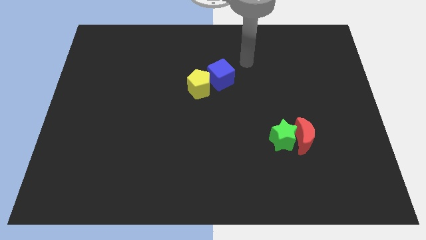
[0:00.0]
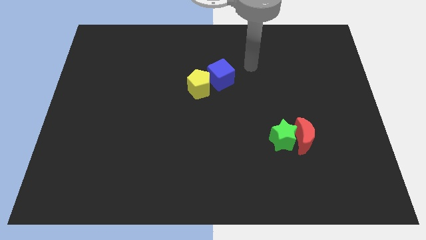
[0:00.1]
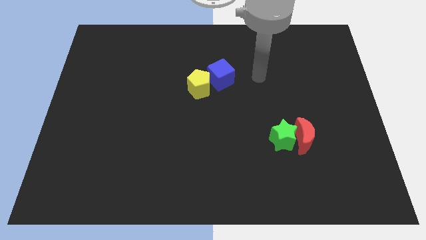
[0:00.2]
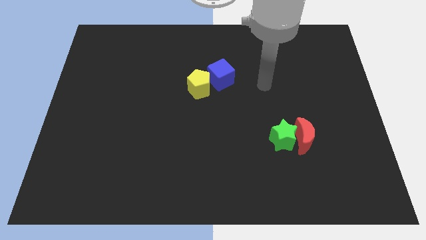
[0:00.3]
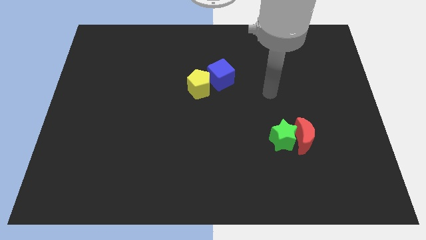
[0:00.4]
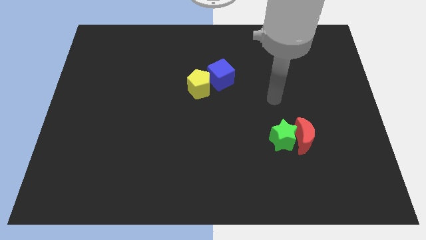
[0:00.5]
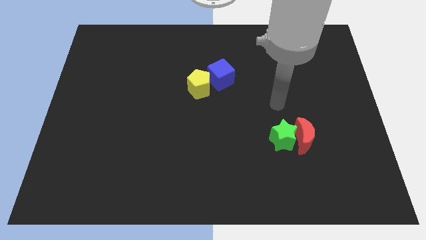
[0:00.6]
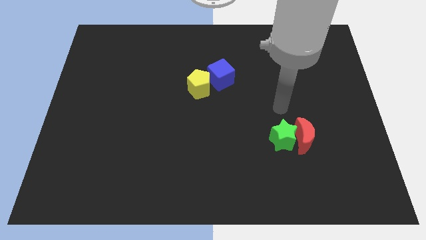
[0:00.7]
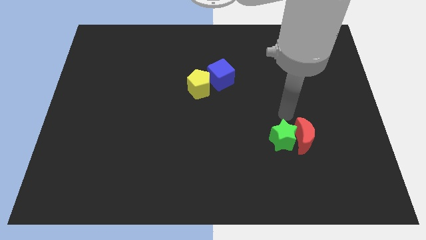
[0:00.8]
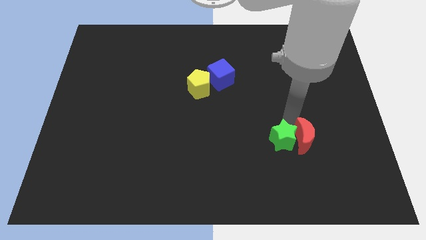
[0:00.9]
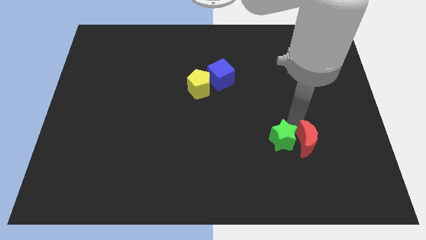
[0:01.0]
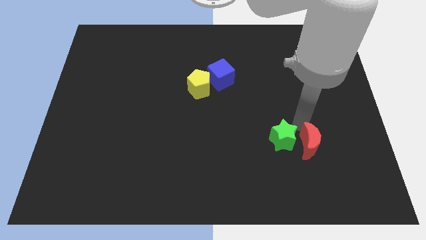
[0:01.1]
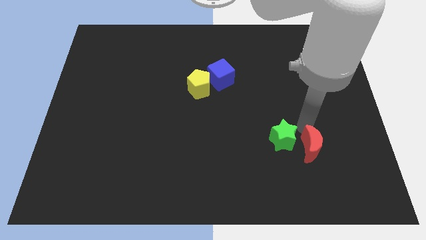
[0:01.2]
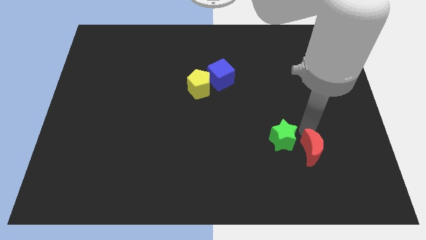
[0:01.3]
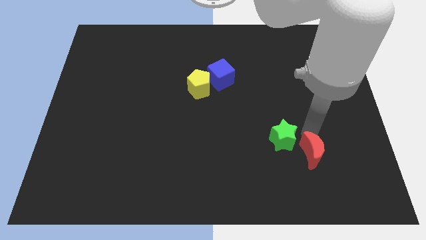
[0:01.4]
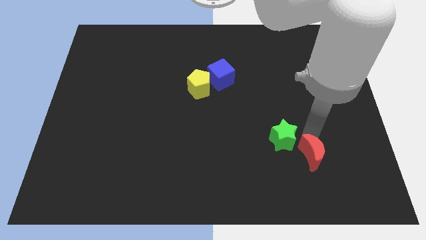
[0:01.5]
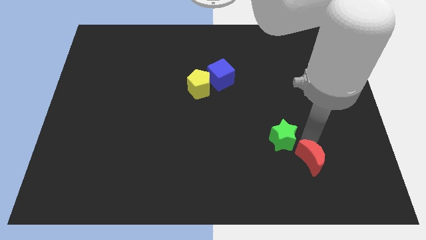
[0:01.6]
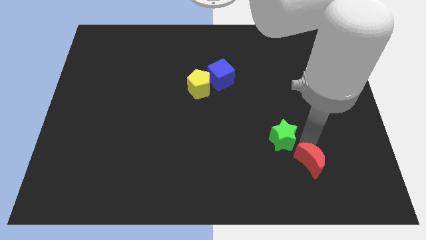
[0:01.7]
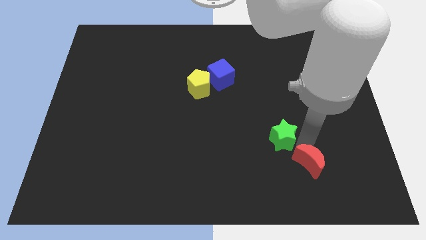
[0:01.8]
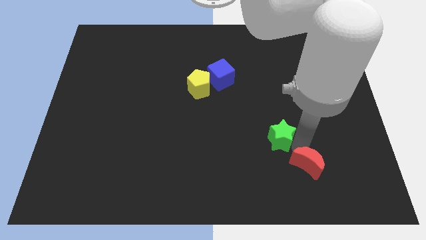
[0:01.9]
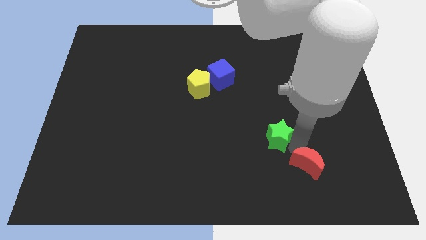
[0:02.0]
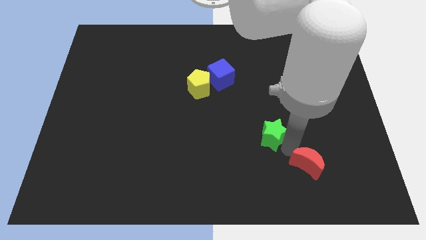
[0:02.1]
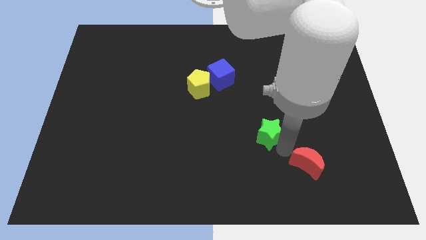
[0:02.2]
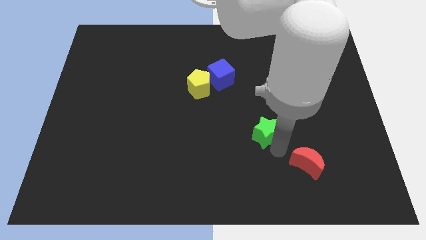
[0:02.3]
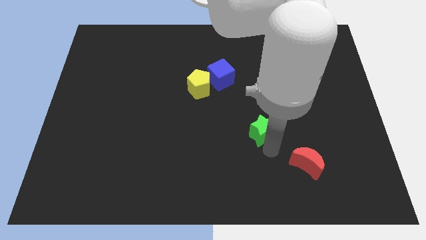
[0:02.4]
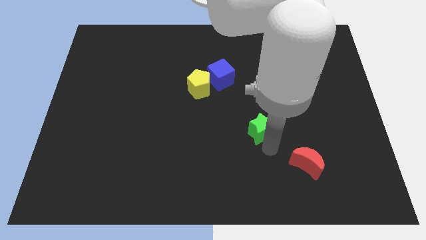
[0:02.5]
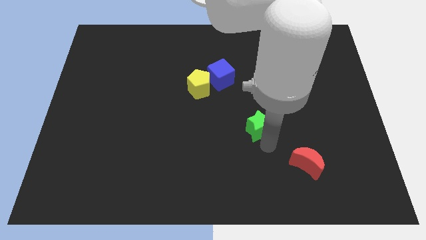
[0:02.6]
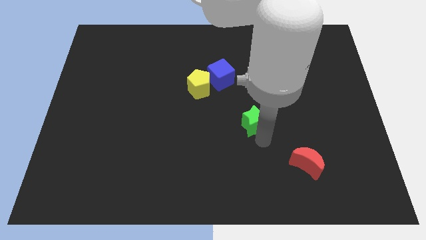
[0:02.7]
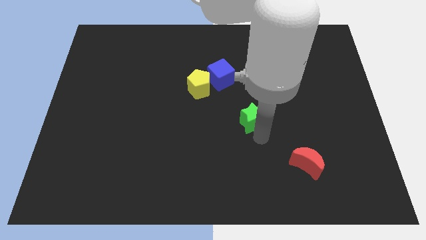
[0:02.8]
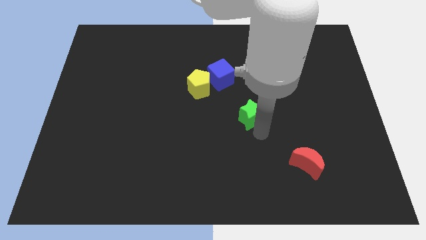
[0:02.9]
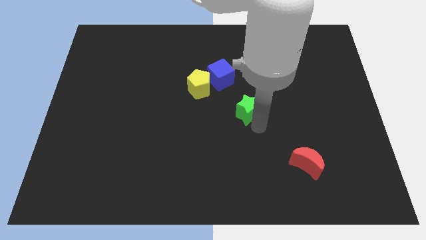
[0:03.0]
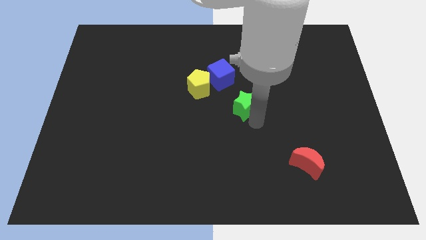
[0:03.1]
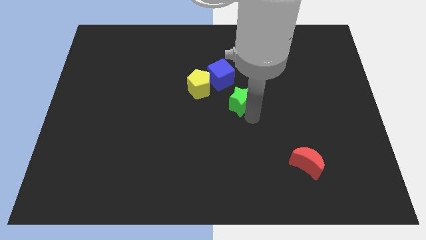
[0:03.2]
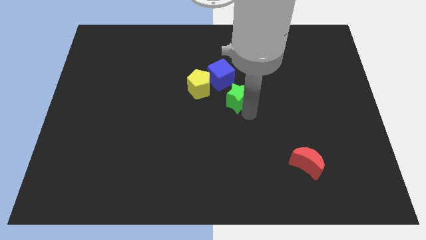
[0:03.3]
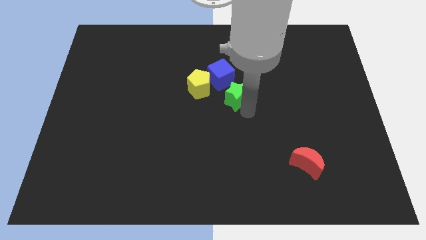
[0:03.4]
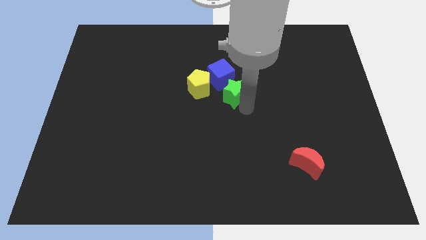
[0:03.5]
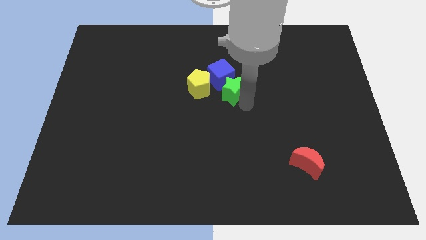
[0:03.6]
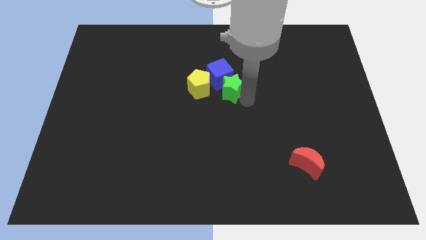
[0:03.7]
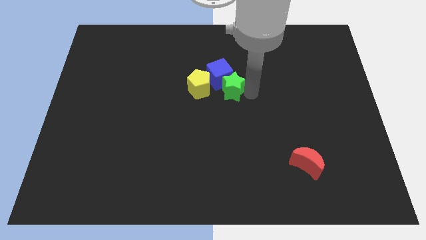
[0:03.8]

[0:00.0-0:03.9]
move the green block towards the blue block

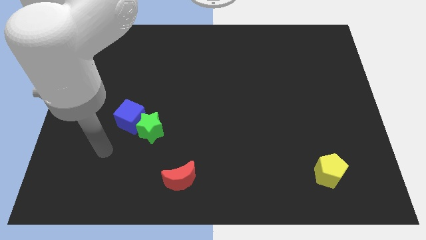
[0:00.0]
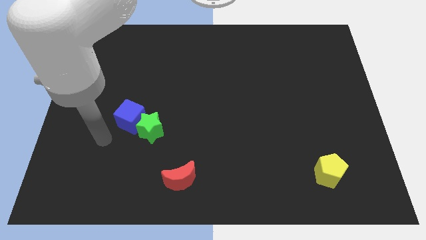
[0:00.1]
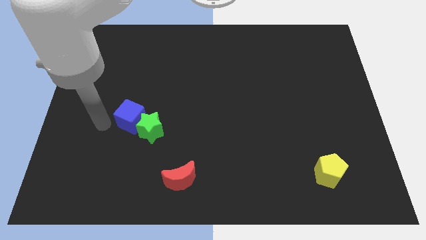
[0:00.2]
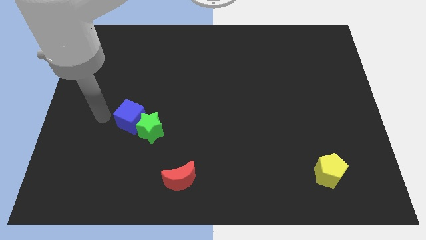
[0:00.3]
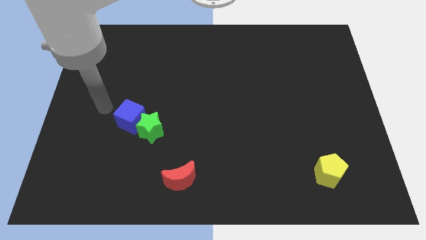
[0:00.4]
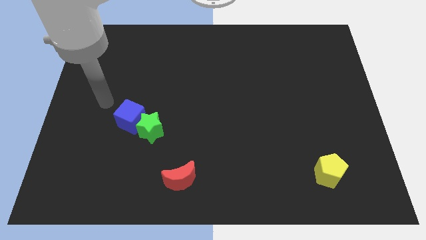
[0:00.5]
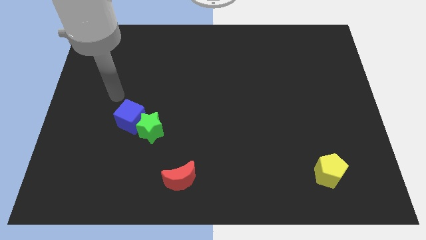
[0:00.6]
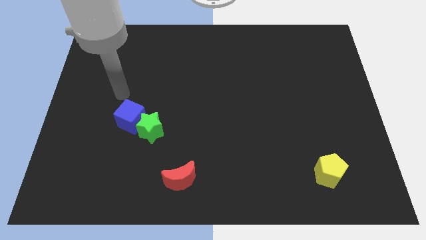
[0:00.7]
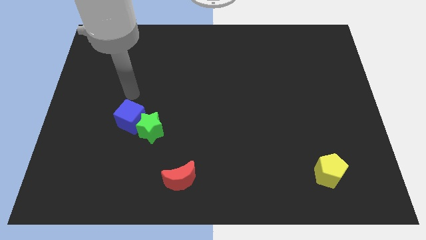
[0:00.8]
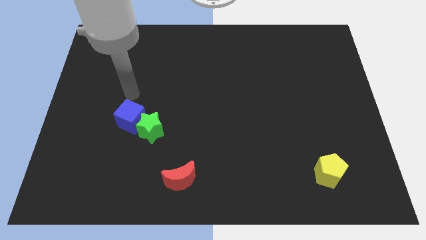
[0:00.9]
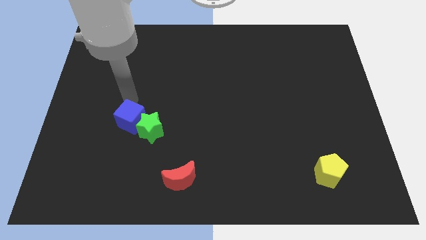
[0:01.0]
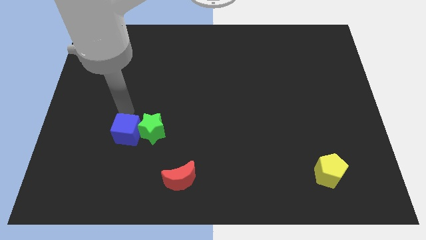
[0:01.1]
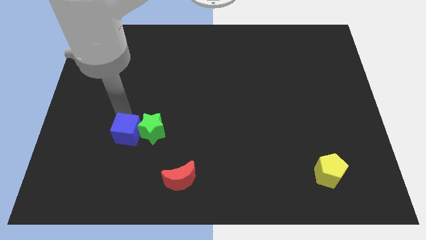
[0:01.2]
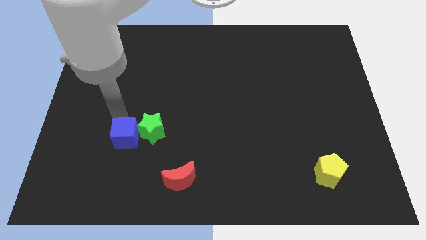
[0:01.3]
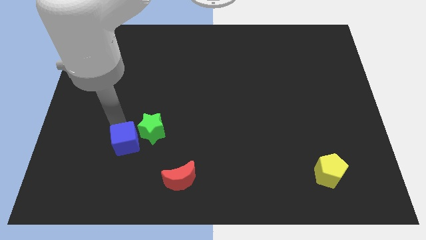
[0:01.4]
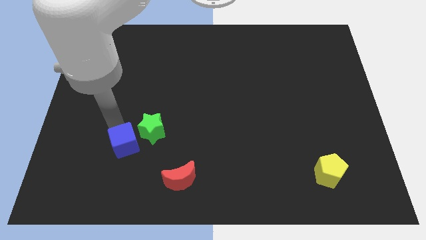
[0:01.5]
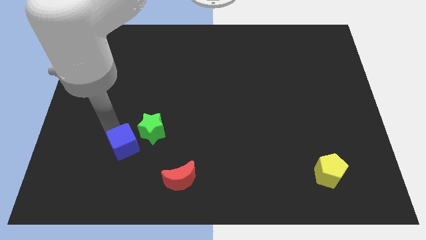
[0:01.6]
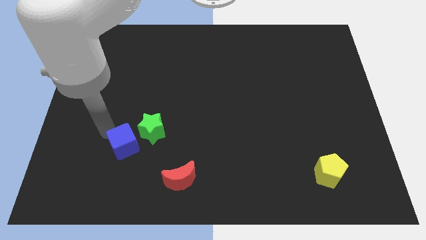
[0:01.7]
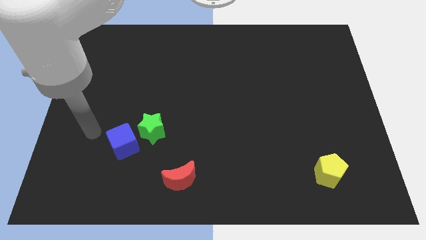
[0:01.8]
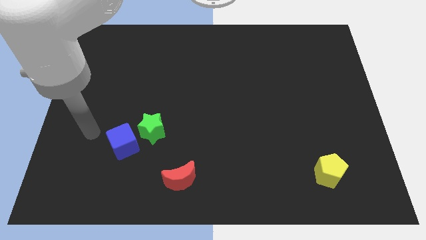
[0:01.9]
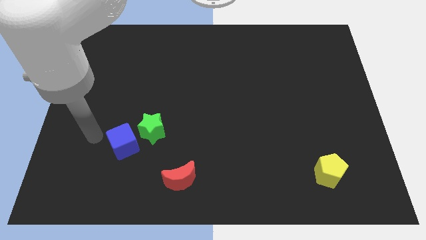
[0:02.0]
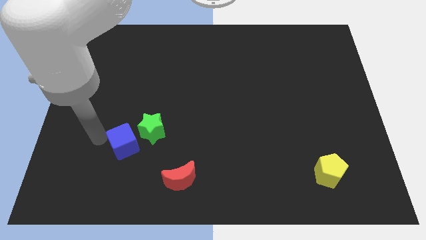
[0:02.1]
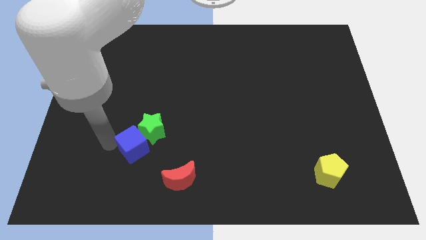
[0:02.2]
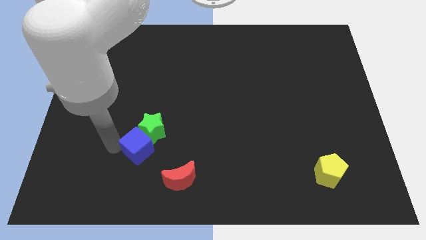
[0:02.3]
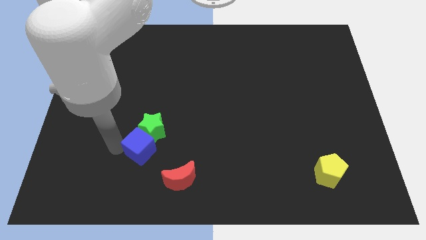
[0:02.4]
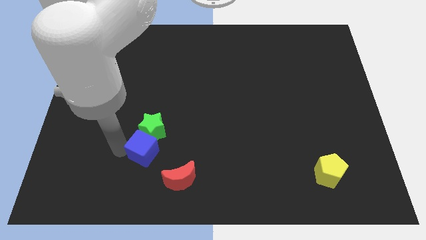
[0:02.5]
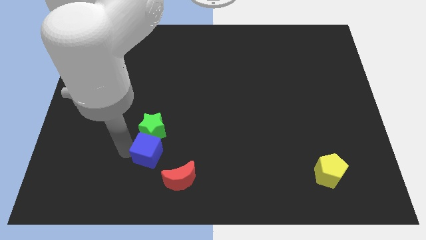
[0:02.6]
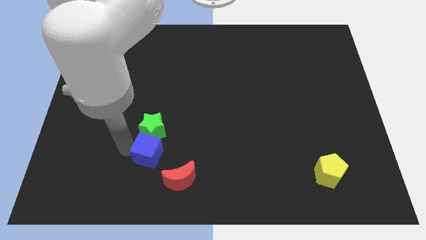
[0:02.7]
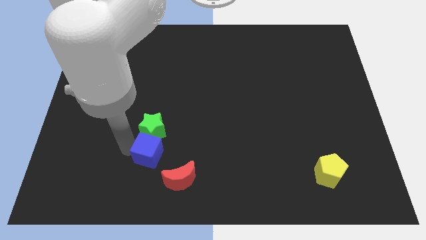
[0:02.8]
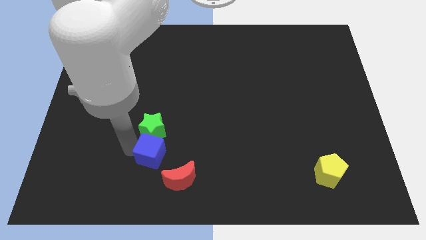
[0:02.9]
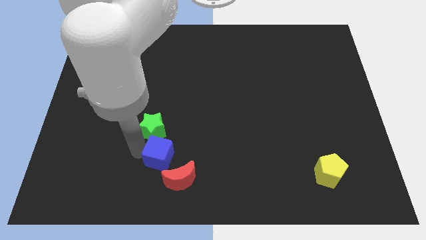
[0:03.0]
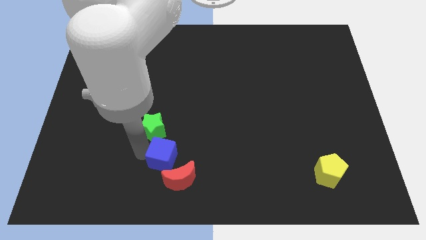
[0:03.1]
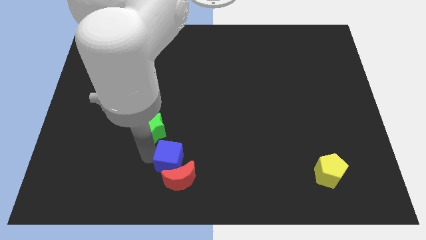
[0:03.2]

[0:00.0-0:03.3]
move the cube to the moon

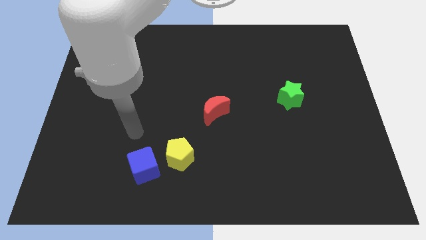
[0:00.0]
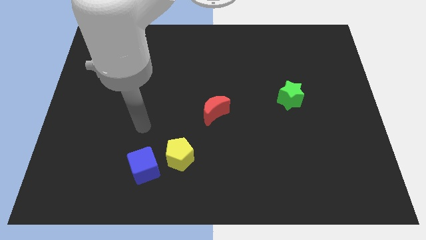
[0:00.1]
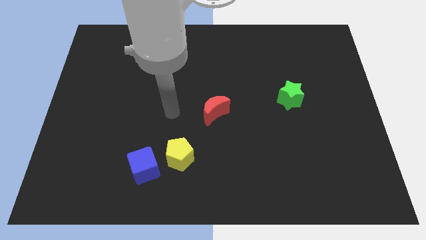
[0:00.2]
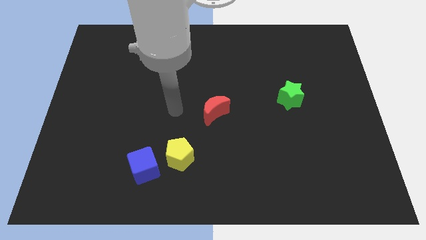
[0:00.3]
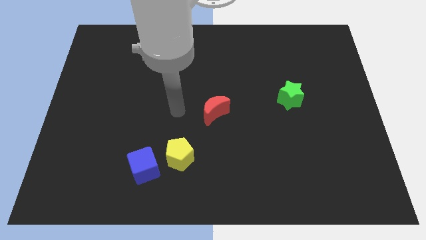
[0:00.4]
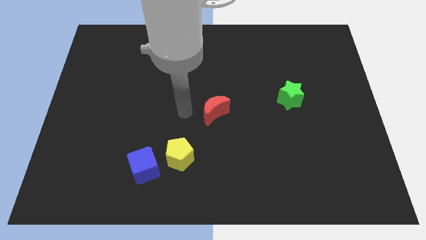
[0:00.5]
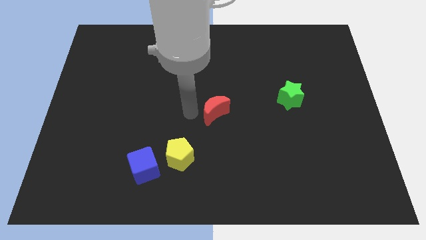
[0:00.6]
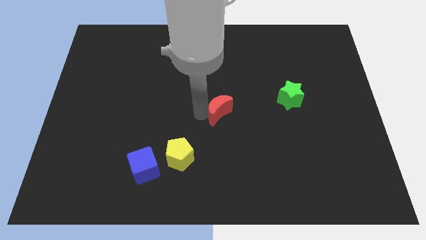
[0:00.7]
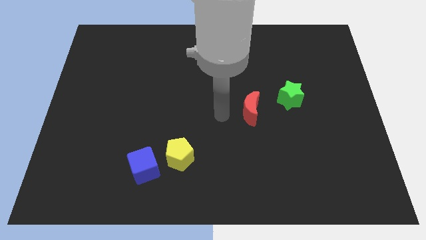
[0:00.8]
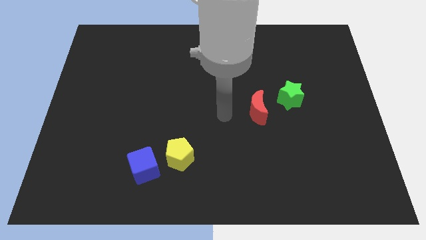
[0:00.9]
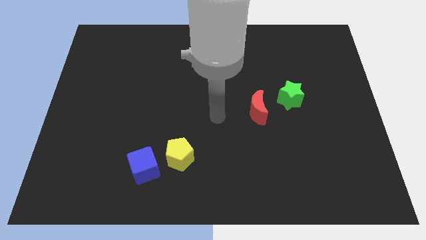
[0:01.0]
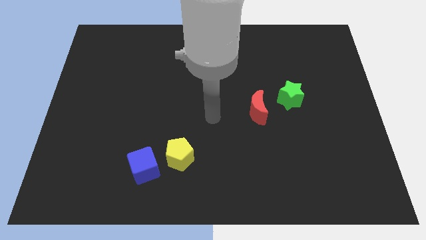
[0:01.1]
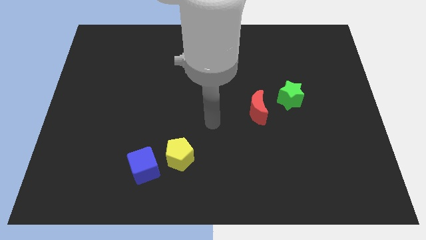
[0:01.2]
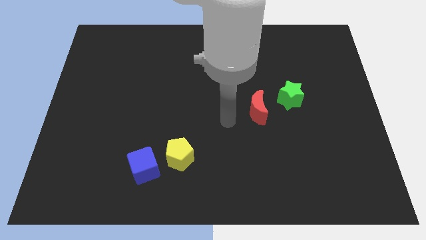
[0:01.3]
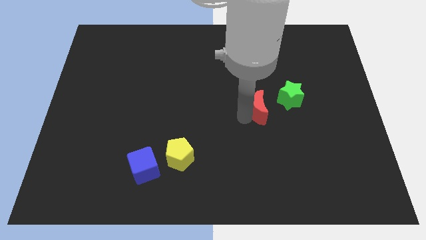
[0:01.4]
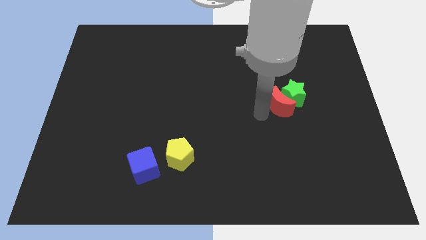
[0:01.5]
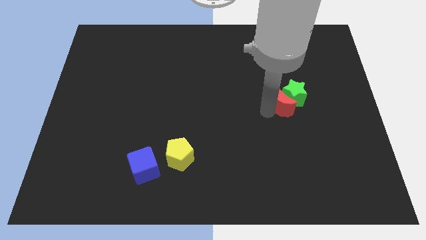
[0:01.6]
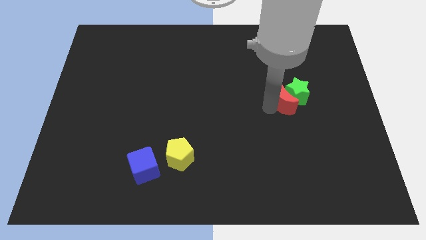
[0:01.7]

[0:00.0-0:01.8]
put the red moon close to the green star
